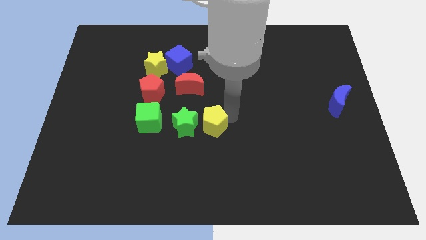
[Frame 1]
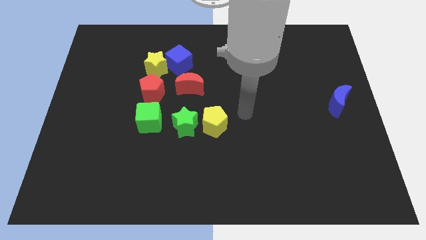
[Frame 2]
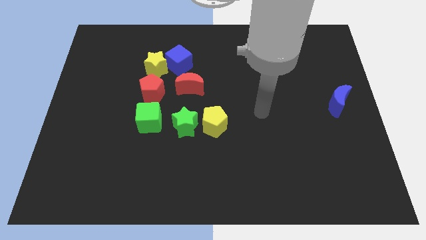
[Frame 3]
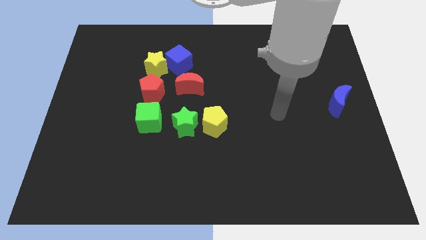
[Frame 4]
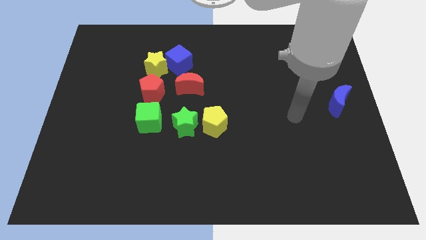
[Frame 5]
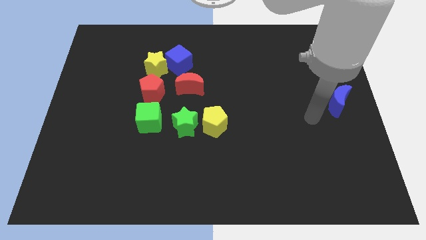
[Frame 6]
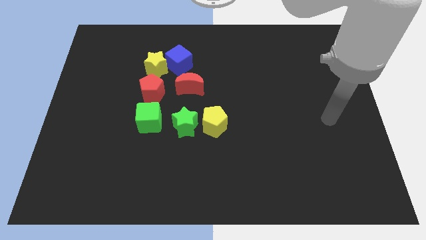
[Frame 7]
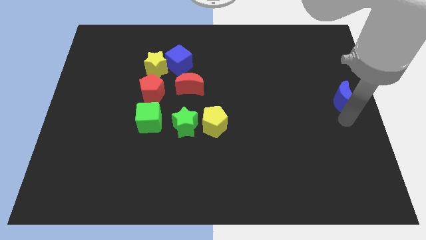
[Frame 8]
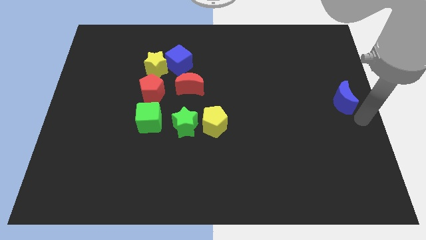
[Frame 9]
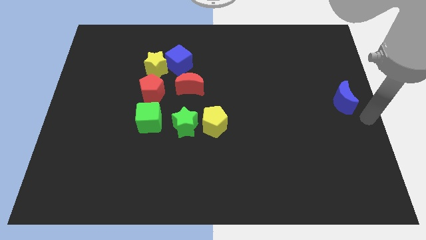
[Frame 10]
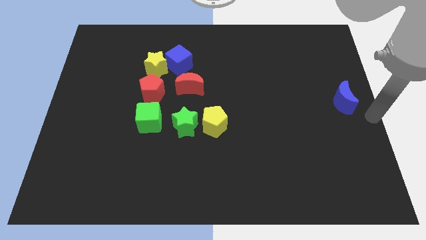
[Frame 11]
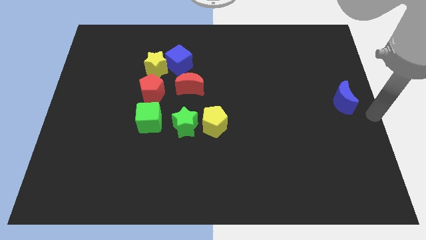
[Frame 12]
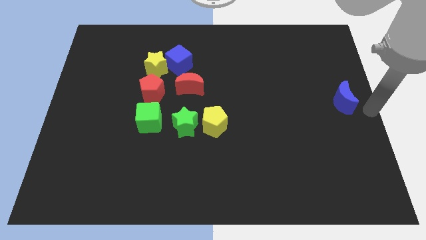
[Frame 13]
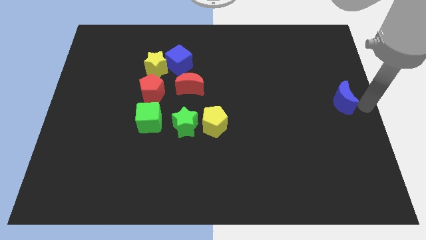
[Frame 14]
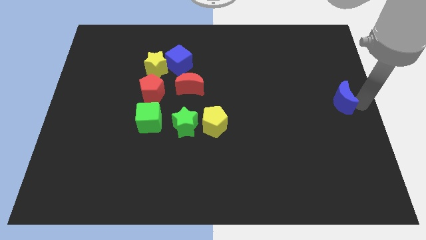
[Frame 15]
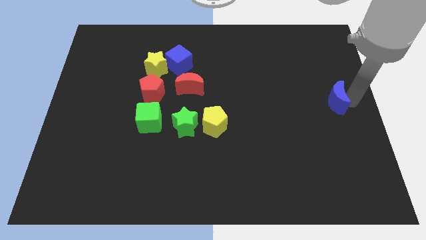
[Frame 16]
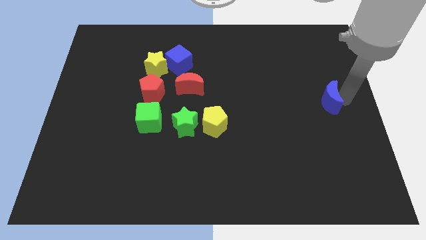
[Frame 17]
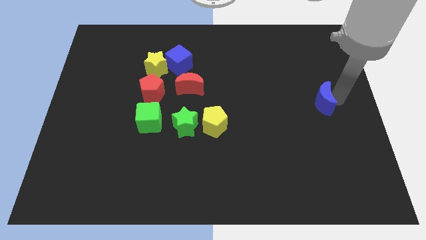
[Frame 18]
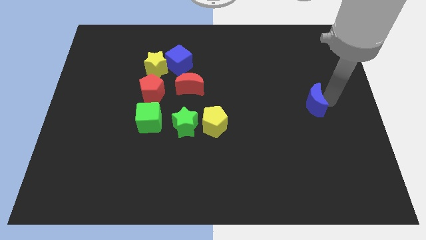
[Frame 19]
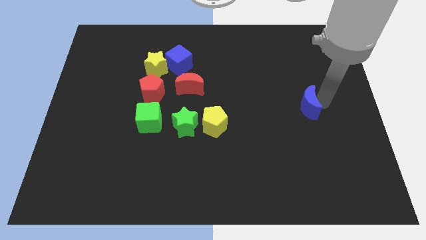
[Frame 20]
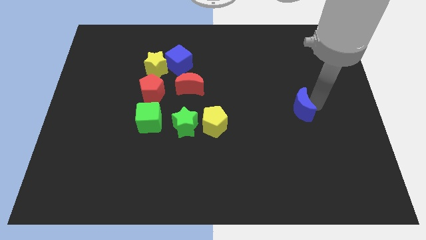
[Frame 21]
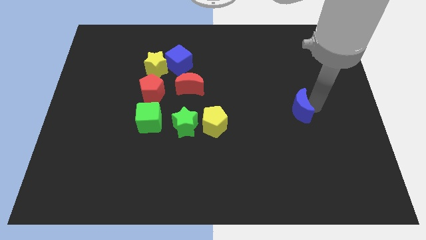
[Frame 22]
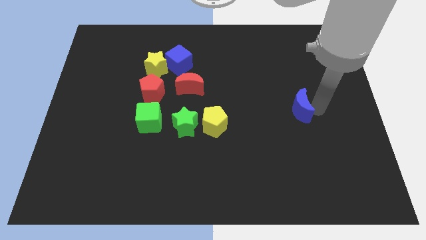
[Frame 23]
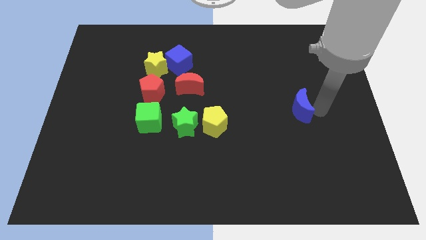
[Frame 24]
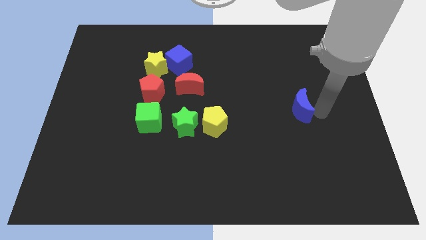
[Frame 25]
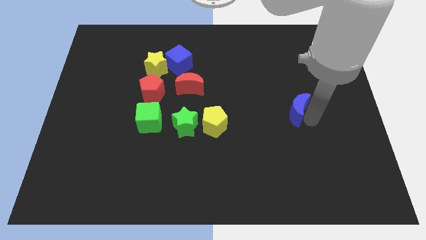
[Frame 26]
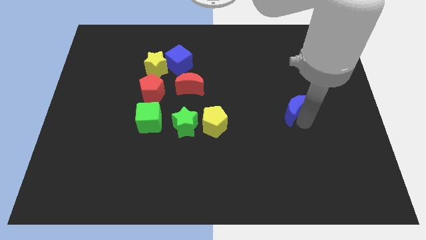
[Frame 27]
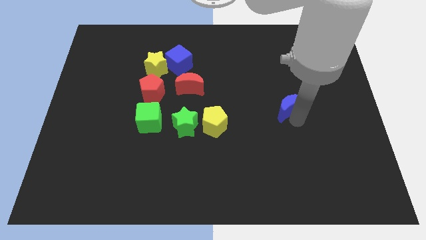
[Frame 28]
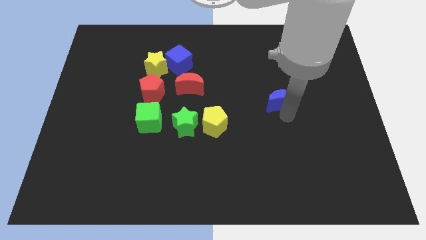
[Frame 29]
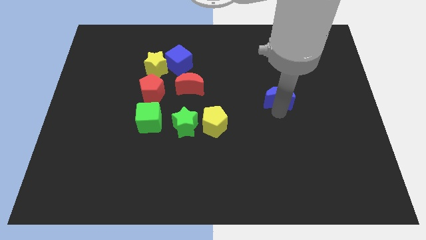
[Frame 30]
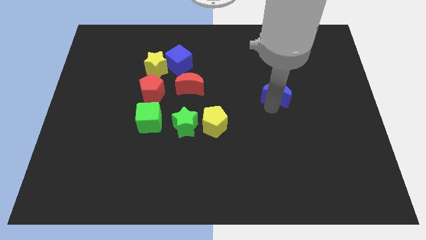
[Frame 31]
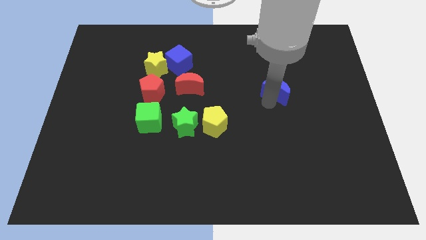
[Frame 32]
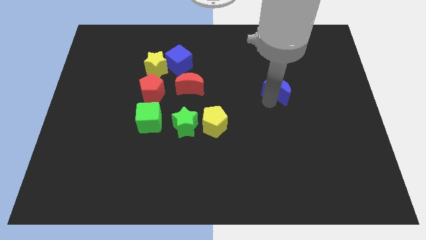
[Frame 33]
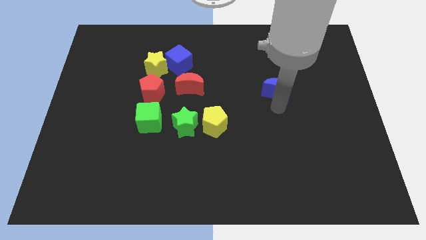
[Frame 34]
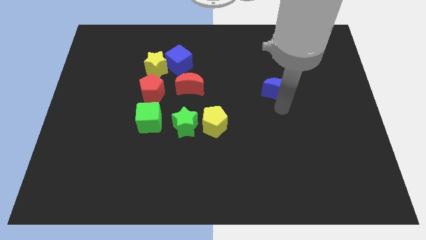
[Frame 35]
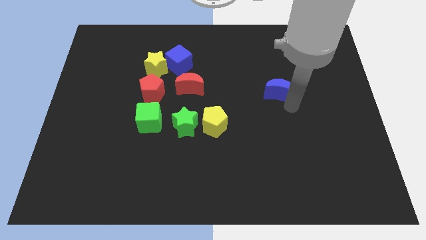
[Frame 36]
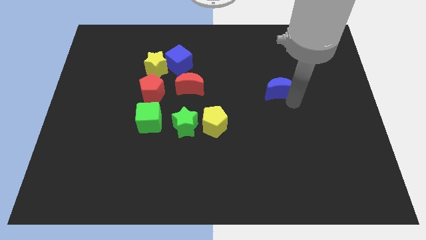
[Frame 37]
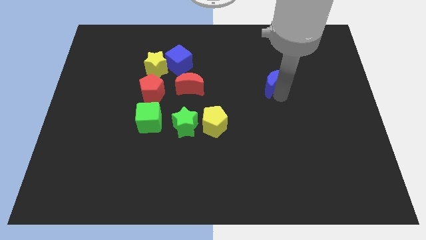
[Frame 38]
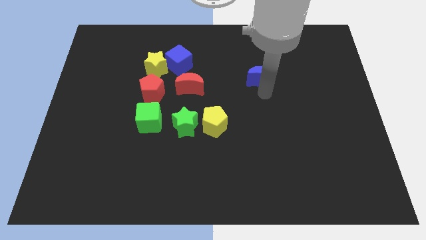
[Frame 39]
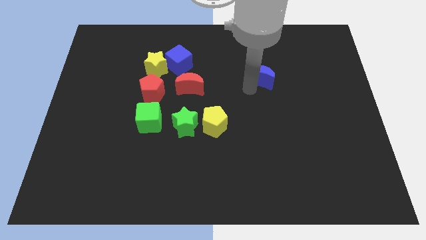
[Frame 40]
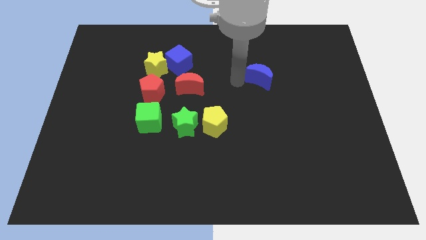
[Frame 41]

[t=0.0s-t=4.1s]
push the blue crescent to the top right of the yellow pentagon

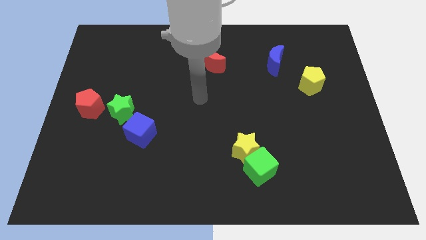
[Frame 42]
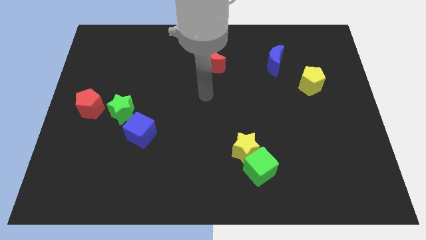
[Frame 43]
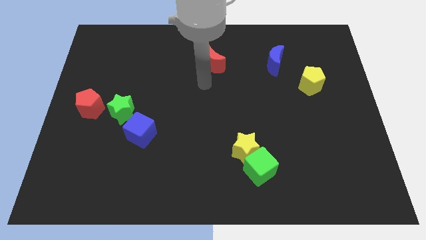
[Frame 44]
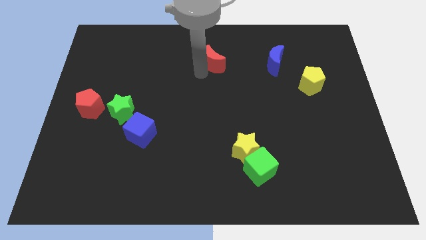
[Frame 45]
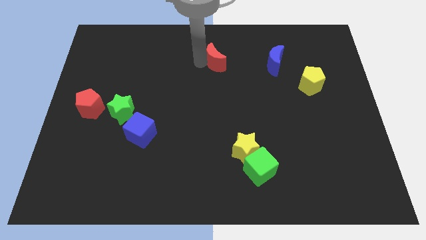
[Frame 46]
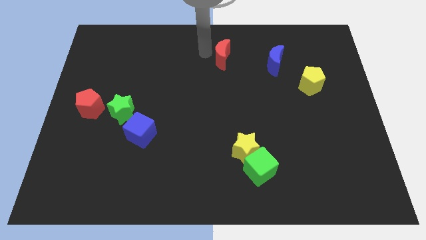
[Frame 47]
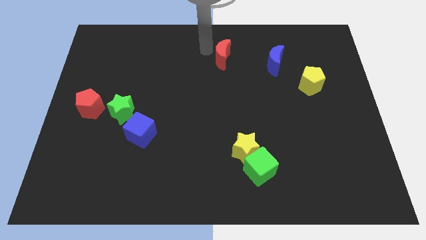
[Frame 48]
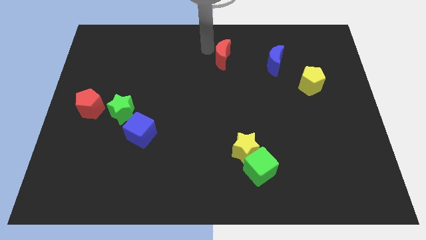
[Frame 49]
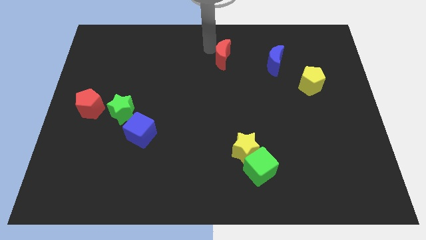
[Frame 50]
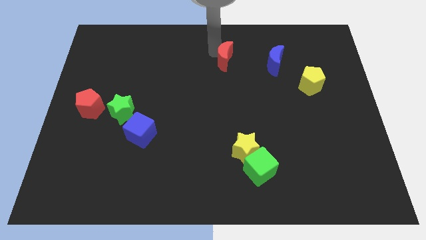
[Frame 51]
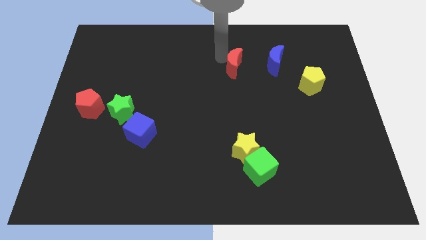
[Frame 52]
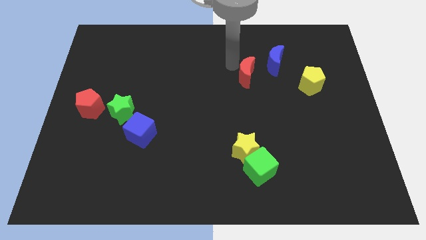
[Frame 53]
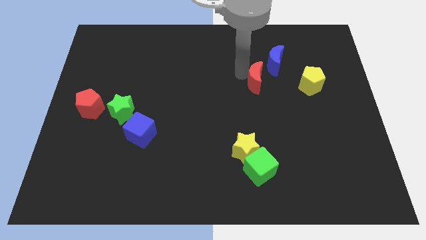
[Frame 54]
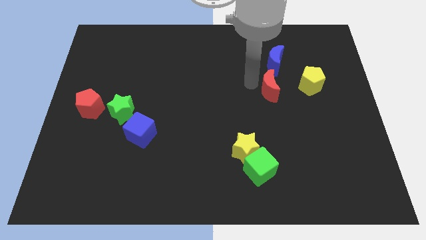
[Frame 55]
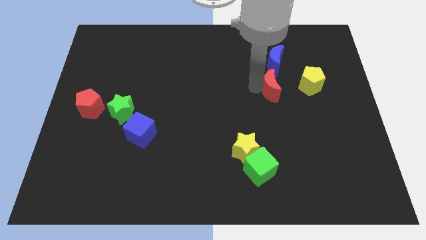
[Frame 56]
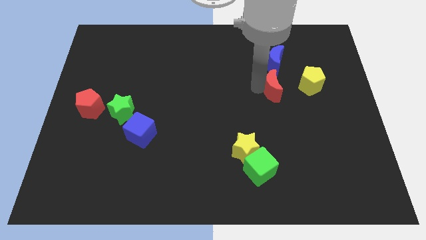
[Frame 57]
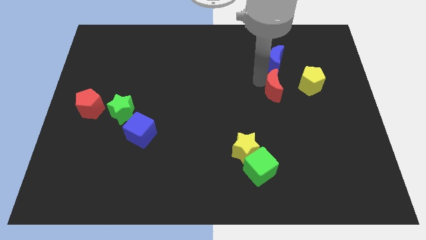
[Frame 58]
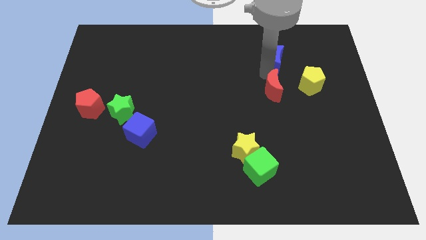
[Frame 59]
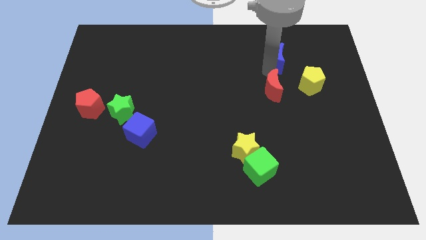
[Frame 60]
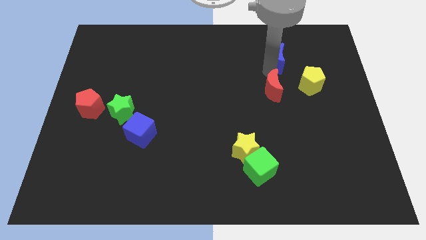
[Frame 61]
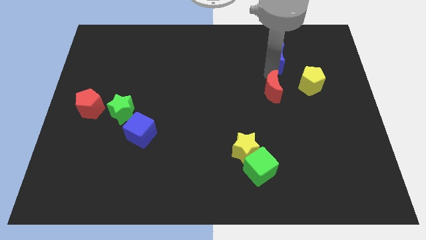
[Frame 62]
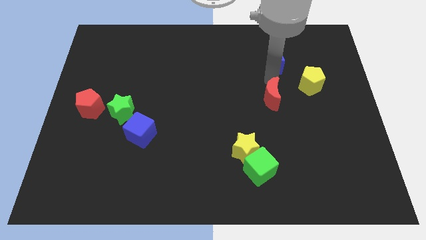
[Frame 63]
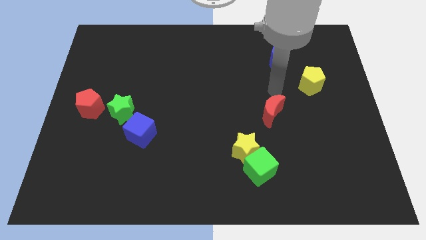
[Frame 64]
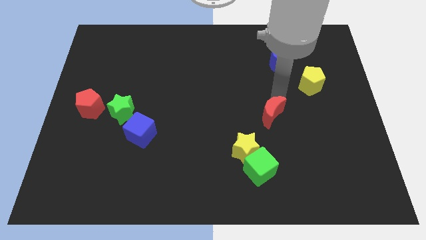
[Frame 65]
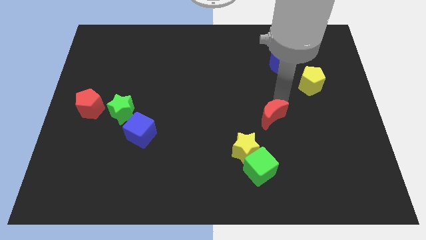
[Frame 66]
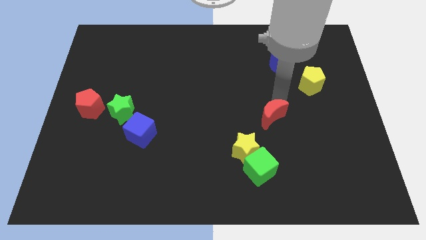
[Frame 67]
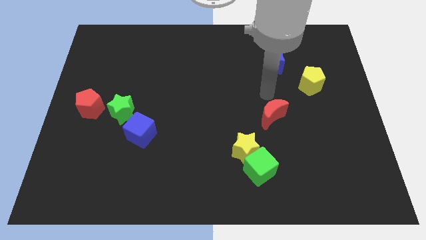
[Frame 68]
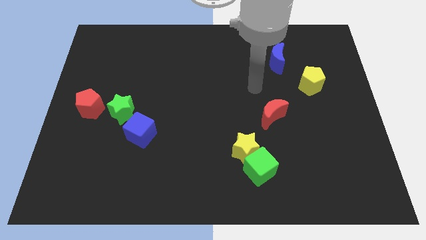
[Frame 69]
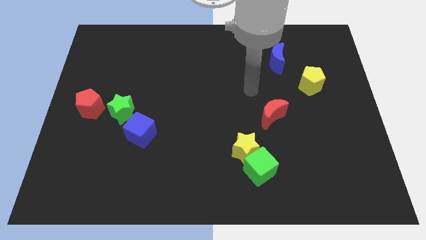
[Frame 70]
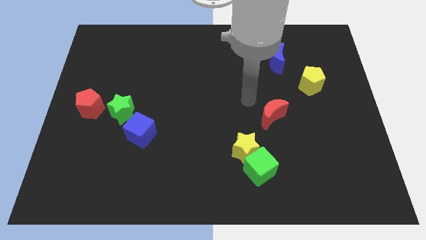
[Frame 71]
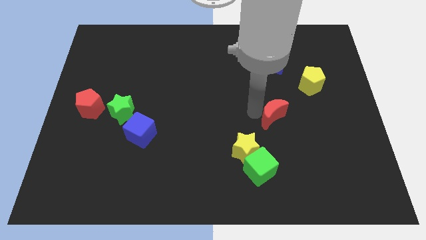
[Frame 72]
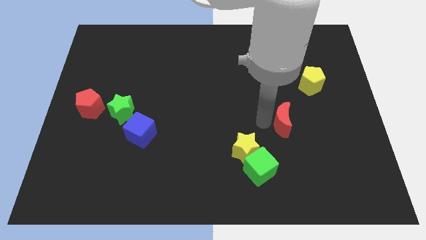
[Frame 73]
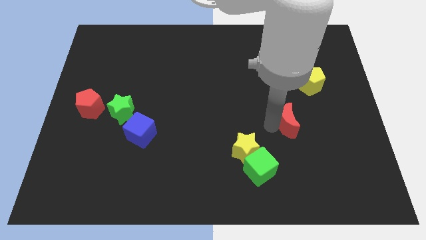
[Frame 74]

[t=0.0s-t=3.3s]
move the red crescent to the center

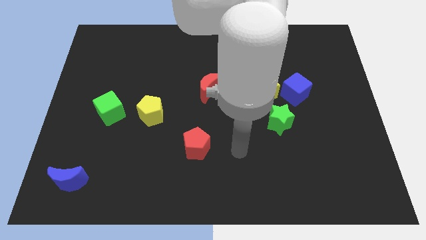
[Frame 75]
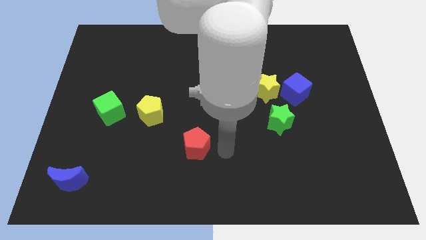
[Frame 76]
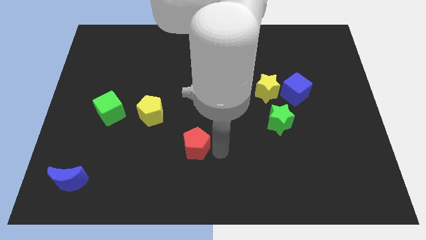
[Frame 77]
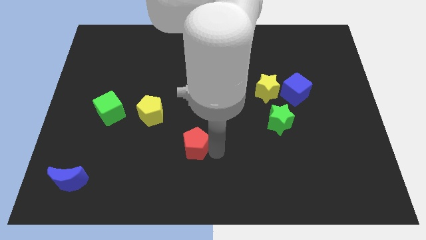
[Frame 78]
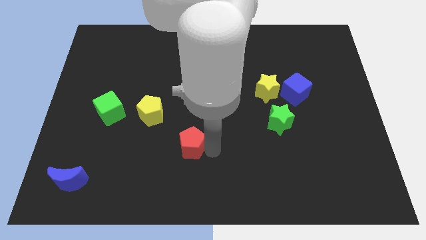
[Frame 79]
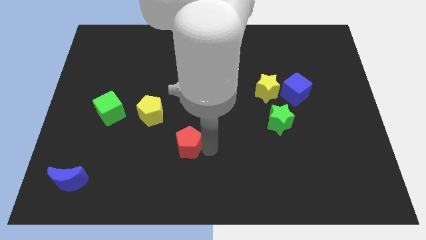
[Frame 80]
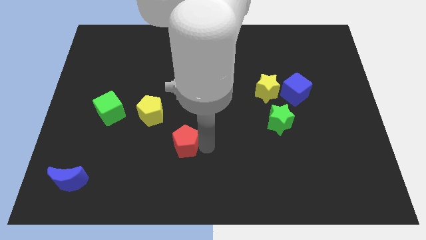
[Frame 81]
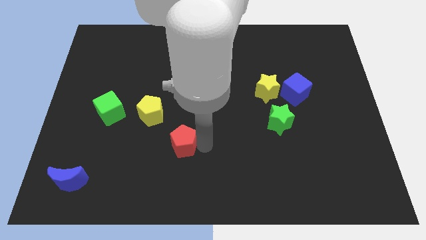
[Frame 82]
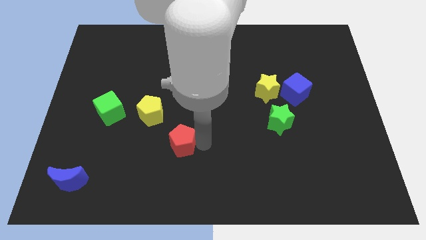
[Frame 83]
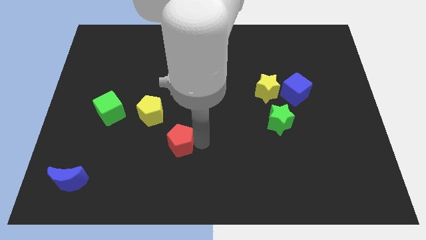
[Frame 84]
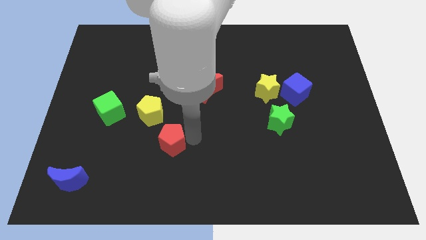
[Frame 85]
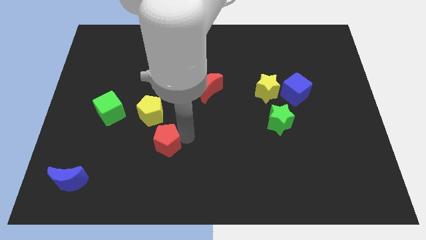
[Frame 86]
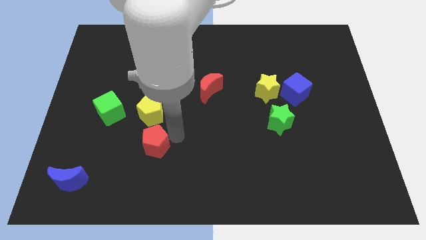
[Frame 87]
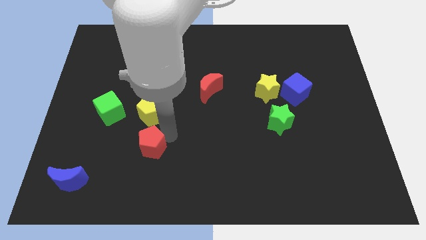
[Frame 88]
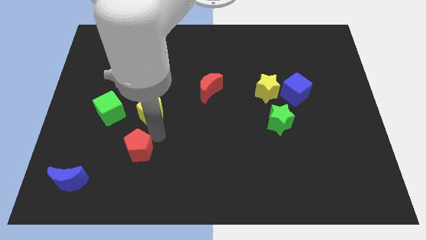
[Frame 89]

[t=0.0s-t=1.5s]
move the red pentagon to the bottom of the yellow pentagon
